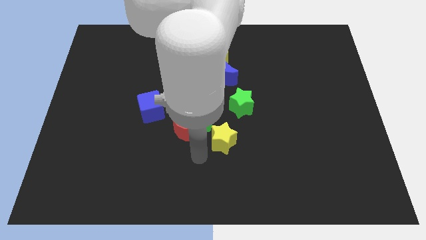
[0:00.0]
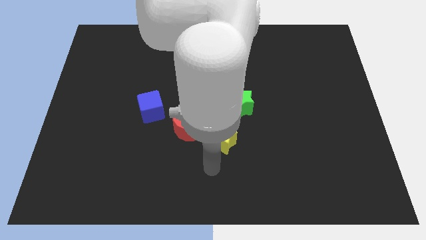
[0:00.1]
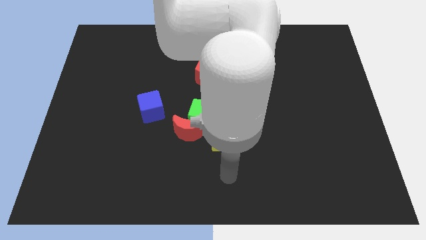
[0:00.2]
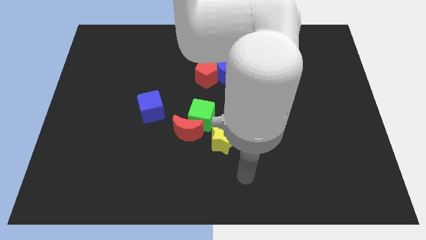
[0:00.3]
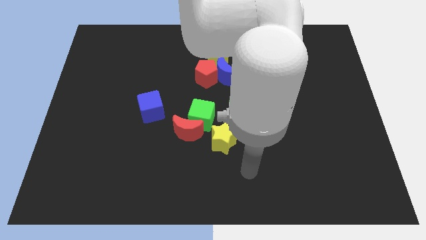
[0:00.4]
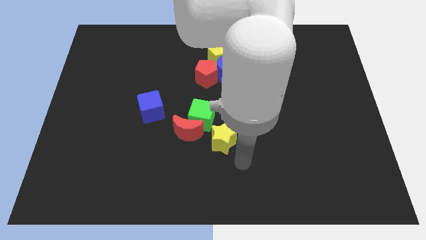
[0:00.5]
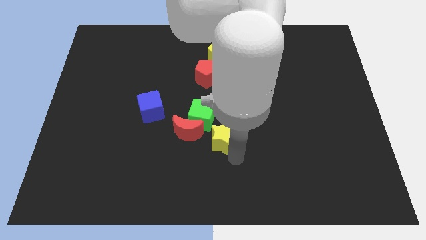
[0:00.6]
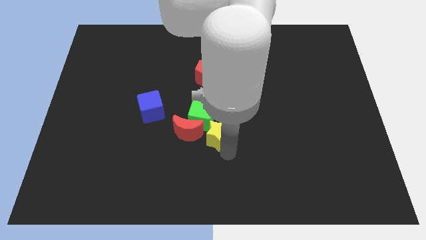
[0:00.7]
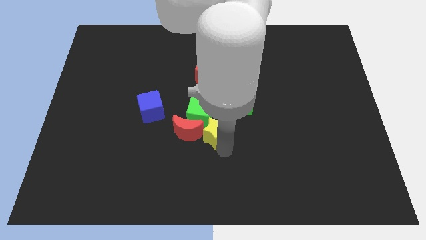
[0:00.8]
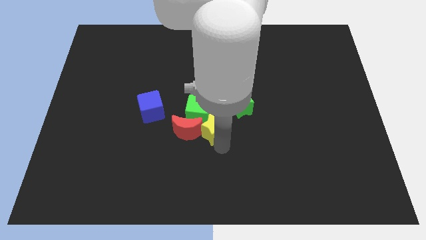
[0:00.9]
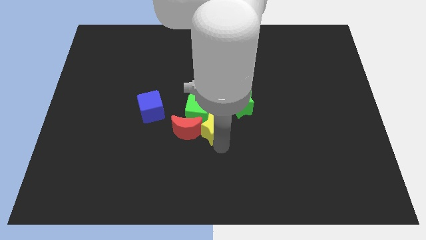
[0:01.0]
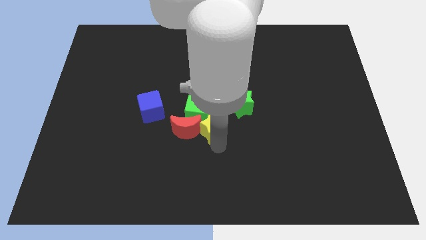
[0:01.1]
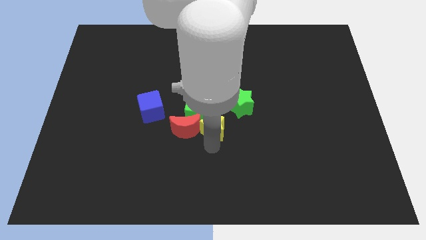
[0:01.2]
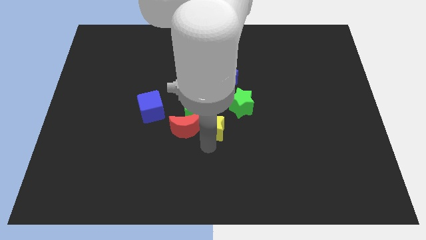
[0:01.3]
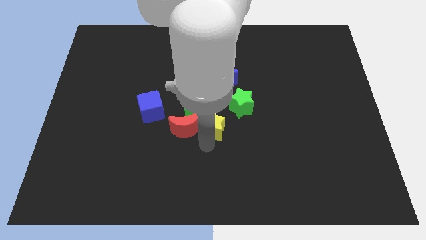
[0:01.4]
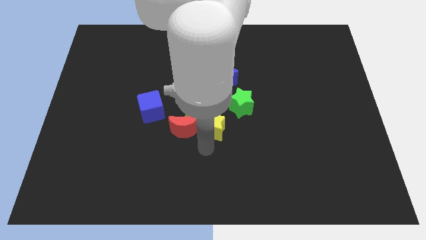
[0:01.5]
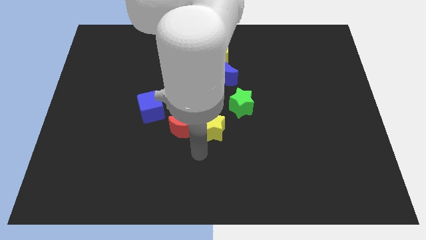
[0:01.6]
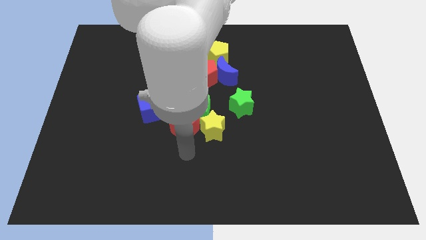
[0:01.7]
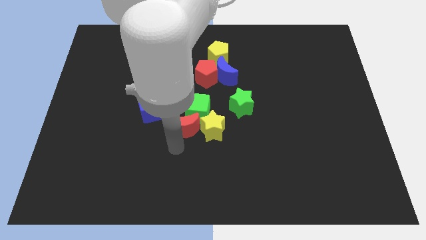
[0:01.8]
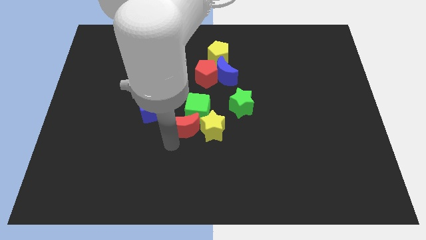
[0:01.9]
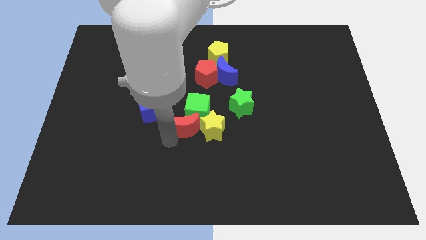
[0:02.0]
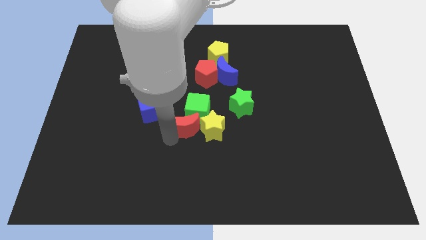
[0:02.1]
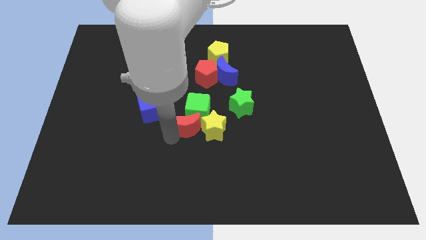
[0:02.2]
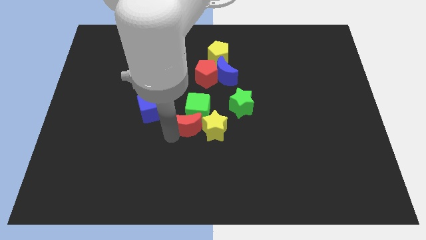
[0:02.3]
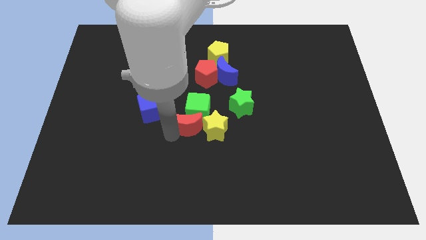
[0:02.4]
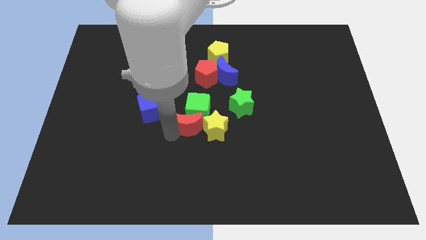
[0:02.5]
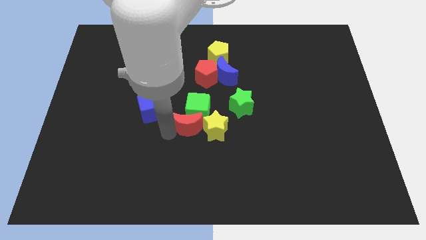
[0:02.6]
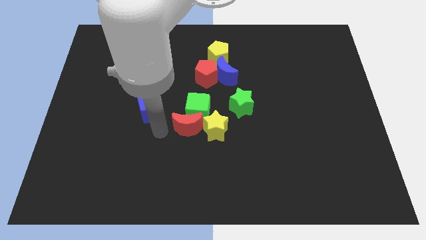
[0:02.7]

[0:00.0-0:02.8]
move the yellow star and red crescent below the green cube

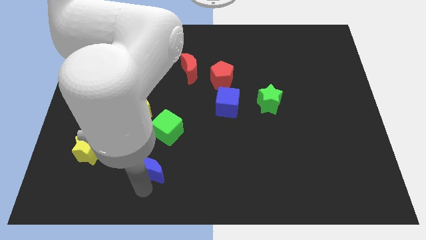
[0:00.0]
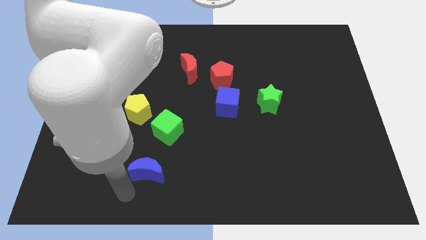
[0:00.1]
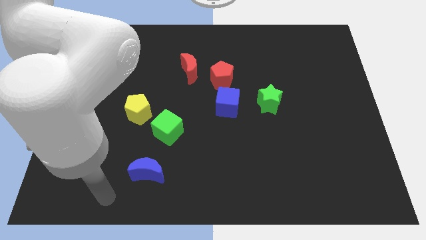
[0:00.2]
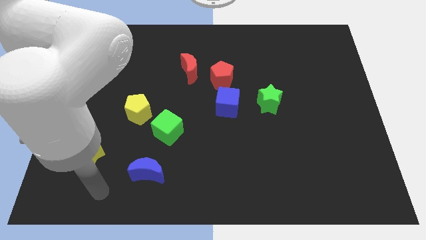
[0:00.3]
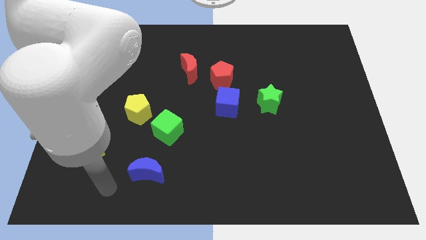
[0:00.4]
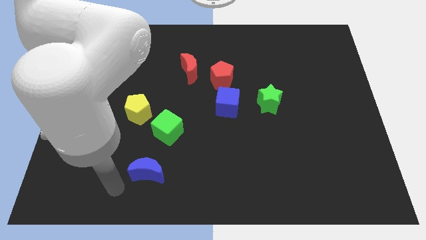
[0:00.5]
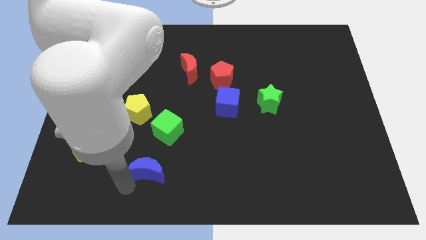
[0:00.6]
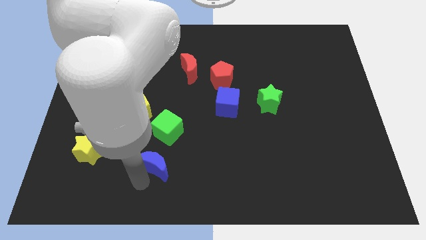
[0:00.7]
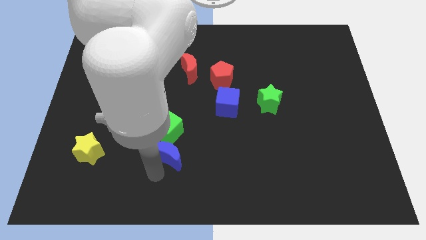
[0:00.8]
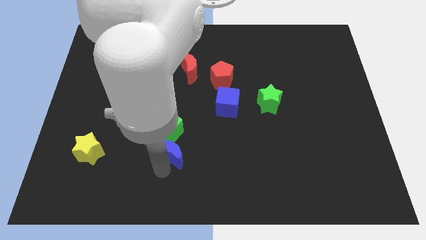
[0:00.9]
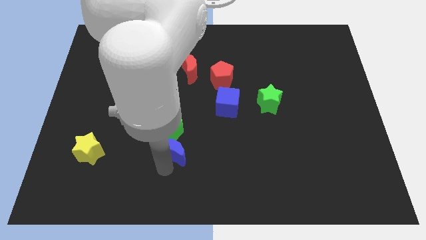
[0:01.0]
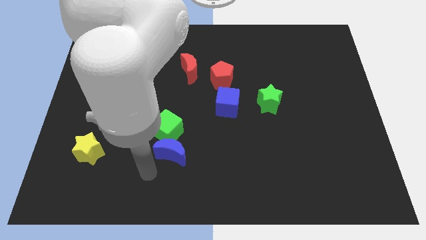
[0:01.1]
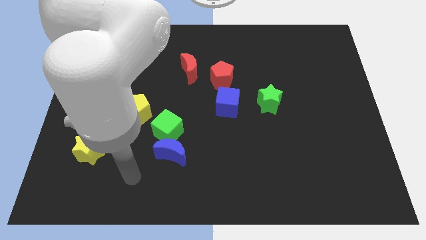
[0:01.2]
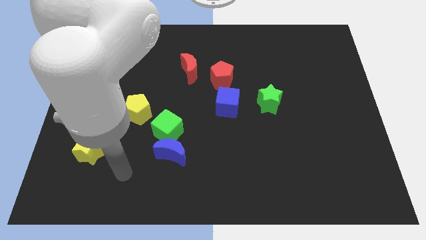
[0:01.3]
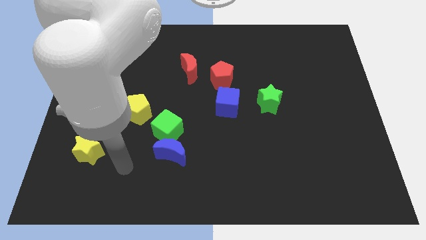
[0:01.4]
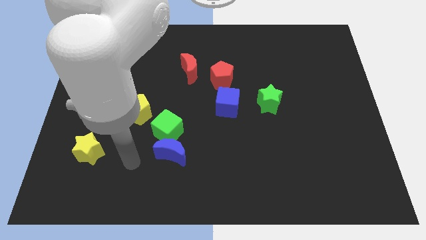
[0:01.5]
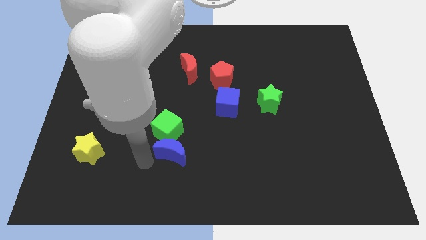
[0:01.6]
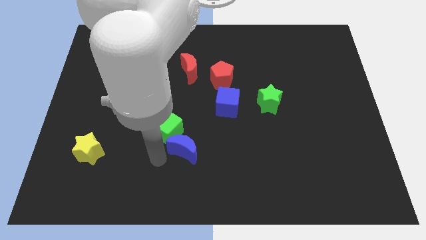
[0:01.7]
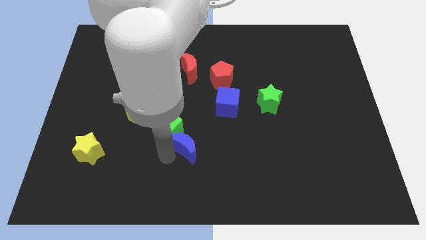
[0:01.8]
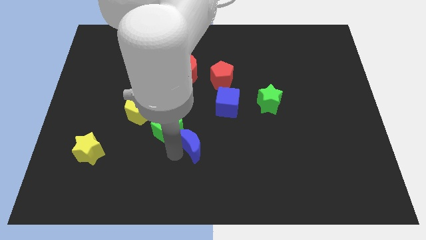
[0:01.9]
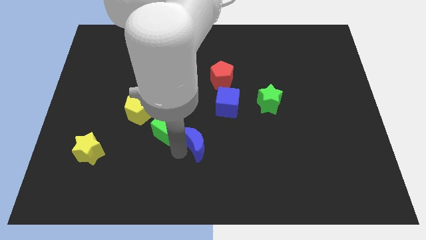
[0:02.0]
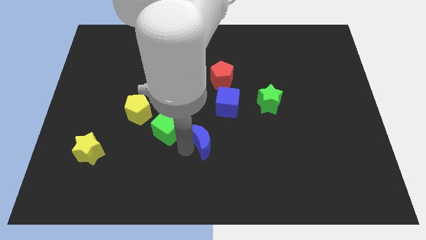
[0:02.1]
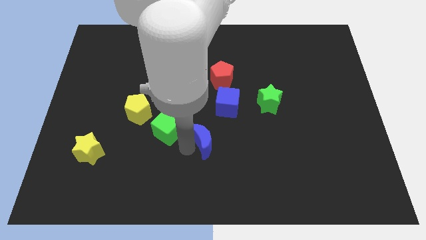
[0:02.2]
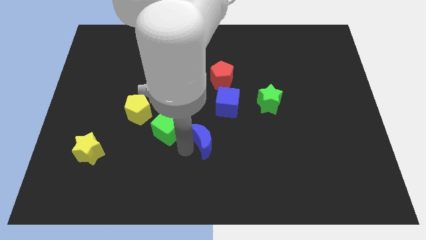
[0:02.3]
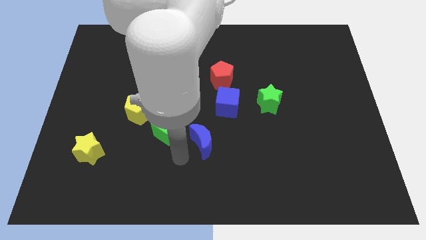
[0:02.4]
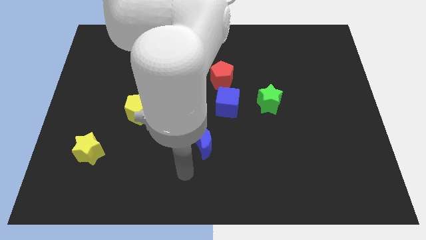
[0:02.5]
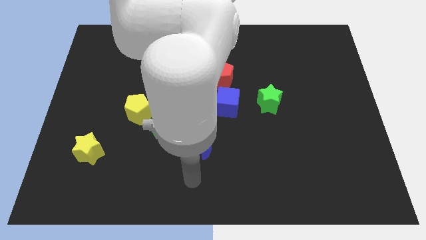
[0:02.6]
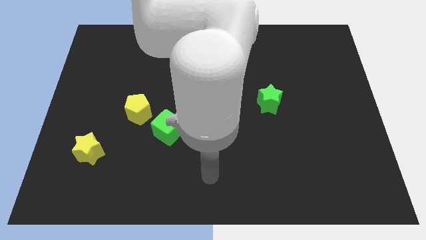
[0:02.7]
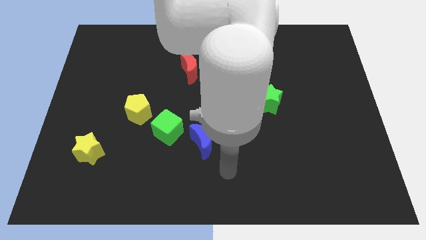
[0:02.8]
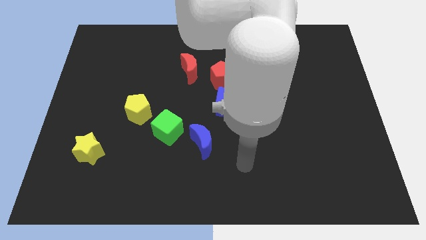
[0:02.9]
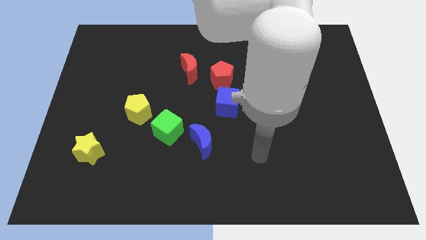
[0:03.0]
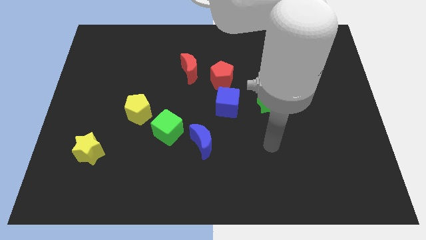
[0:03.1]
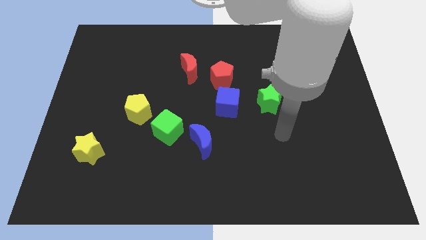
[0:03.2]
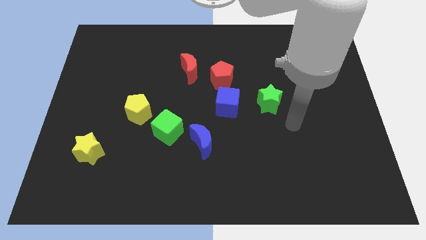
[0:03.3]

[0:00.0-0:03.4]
place blue moon to the right of green cube

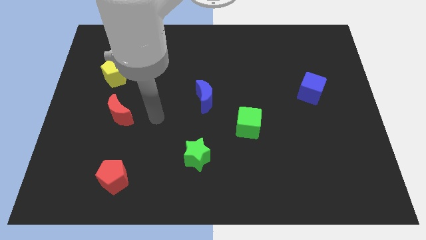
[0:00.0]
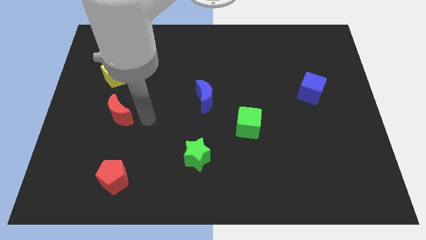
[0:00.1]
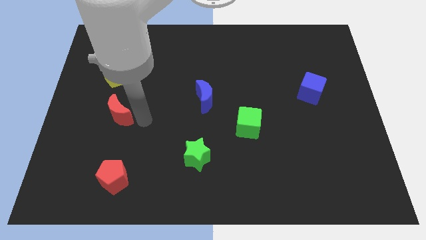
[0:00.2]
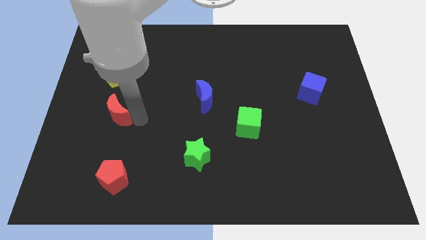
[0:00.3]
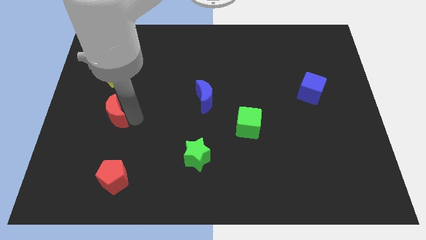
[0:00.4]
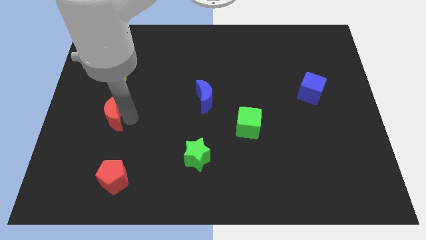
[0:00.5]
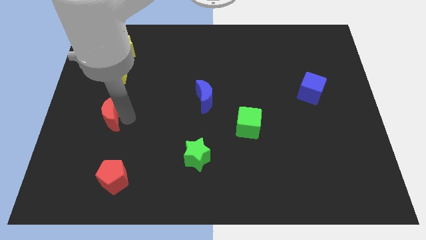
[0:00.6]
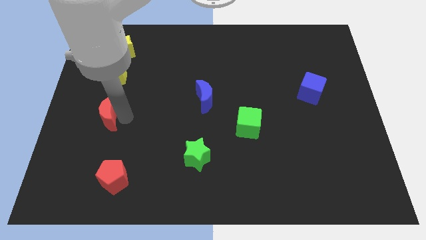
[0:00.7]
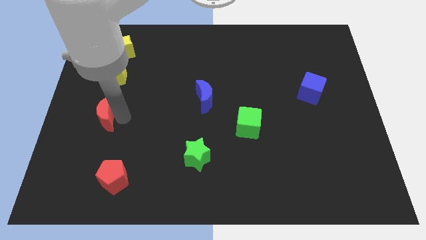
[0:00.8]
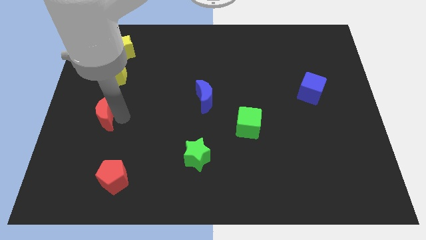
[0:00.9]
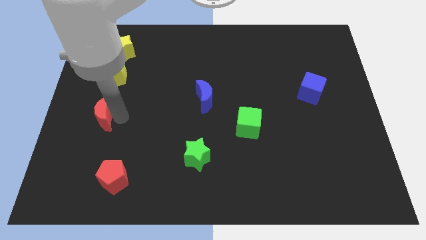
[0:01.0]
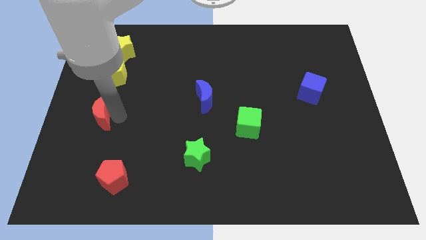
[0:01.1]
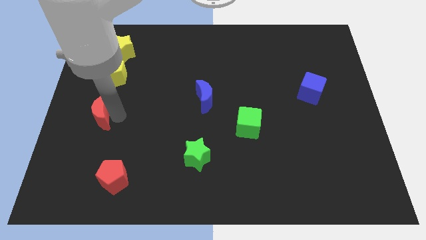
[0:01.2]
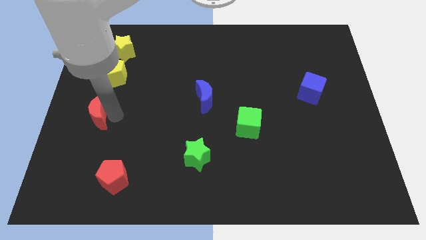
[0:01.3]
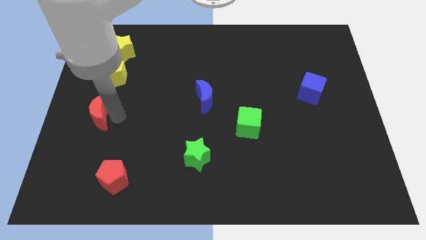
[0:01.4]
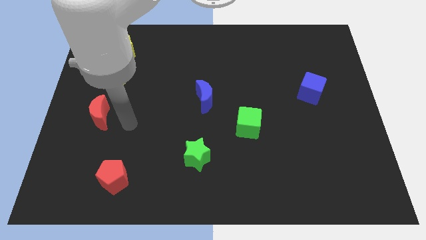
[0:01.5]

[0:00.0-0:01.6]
move the red crescent to the left

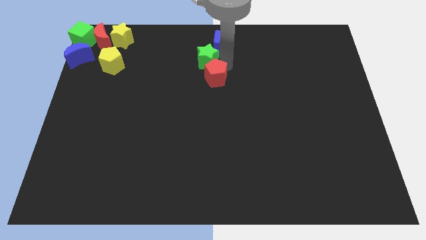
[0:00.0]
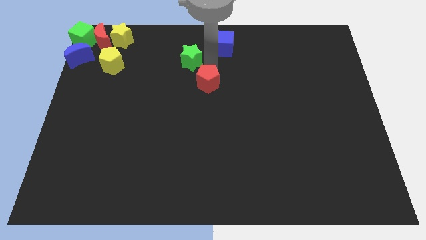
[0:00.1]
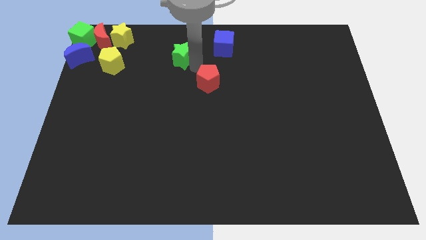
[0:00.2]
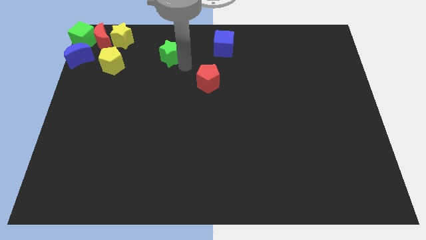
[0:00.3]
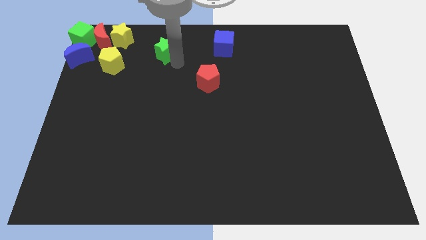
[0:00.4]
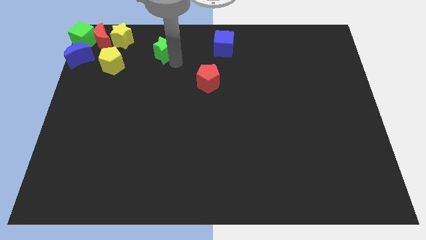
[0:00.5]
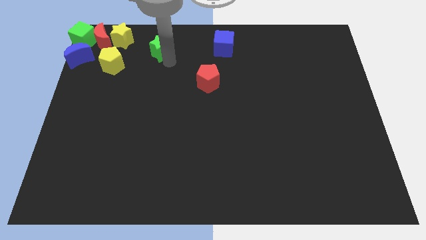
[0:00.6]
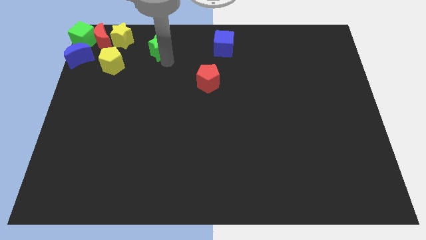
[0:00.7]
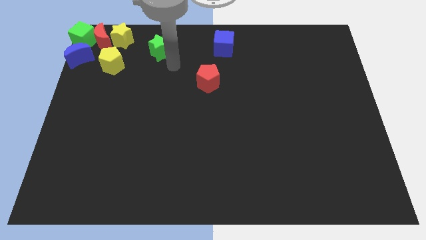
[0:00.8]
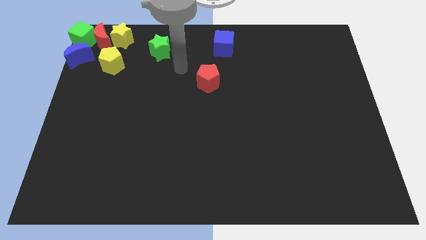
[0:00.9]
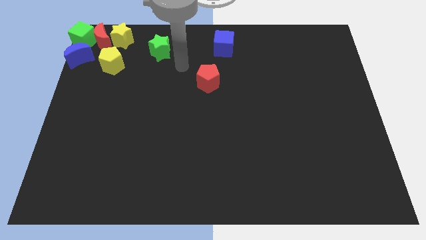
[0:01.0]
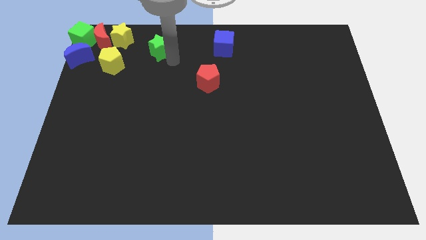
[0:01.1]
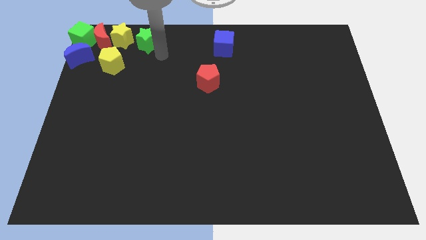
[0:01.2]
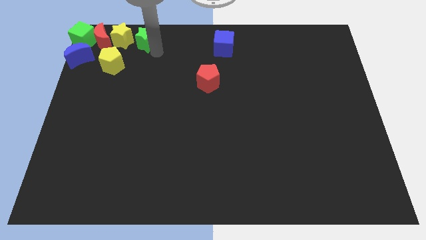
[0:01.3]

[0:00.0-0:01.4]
separate the green star from the blue cube
